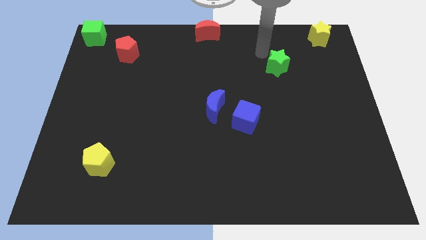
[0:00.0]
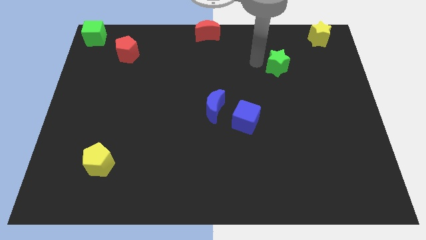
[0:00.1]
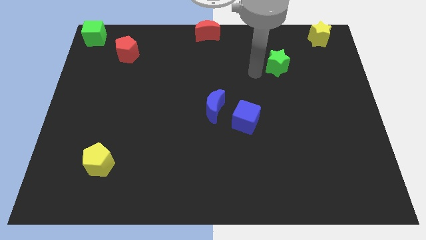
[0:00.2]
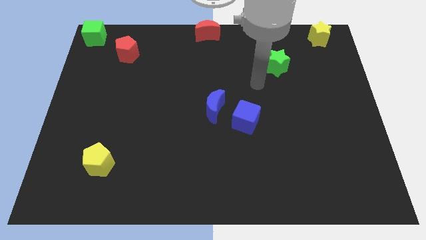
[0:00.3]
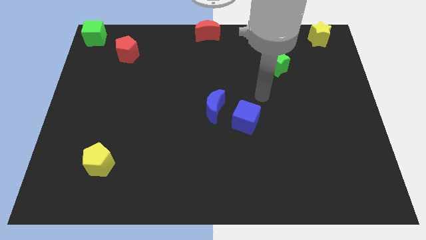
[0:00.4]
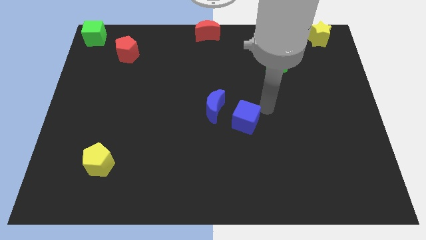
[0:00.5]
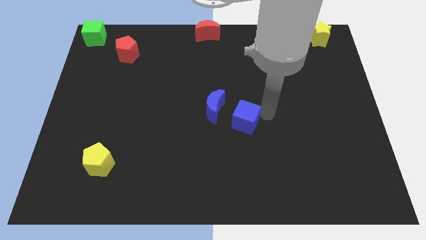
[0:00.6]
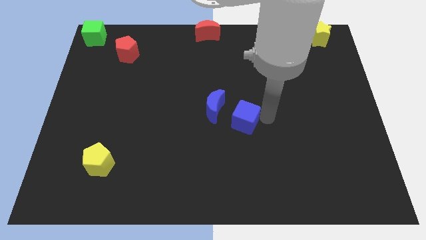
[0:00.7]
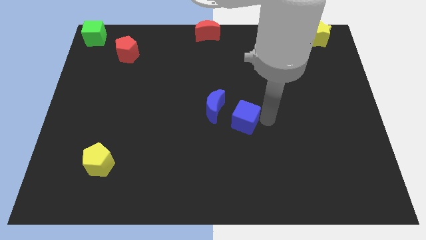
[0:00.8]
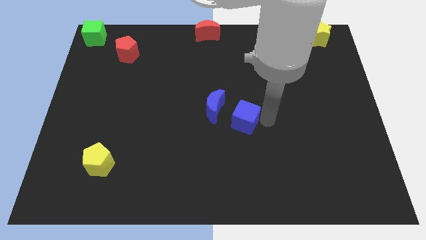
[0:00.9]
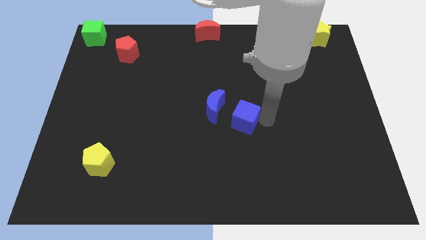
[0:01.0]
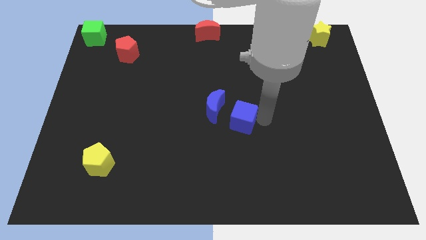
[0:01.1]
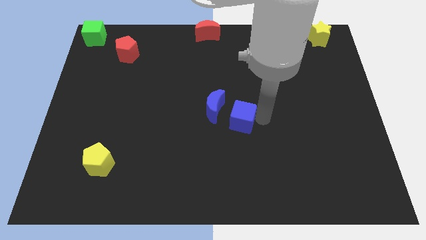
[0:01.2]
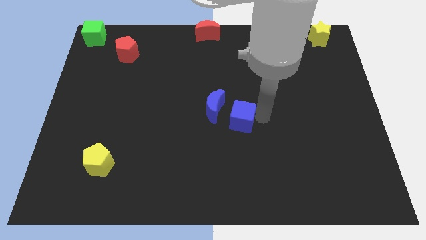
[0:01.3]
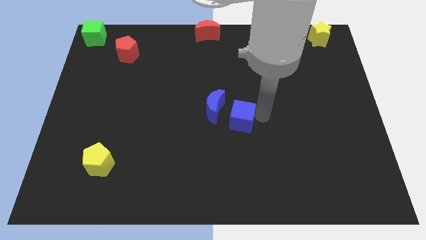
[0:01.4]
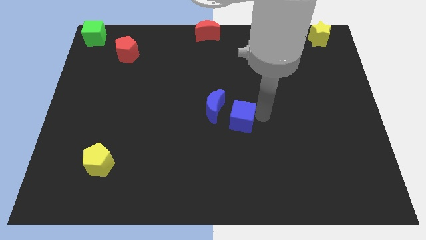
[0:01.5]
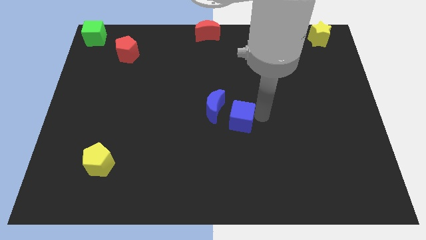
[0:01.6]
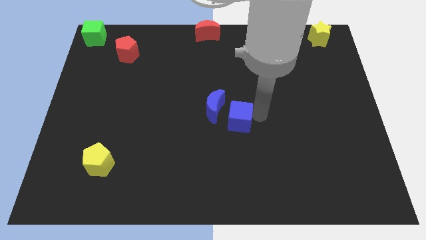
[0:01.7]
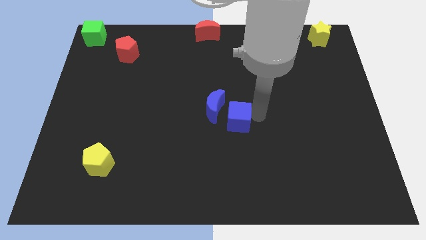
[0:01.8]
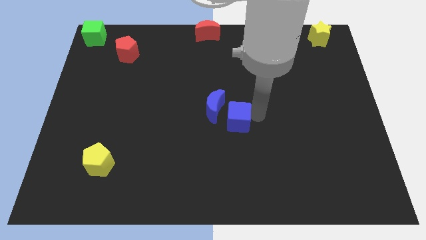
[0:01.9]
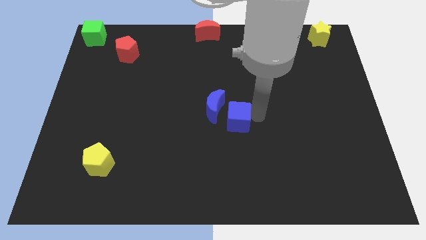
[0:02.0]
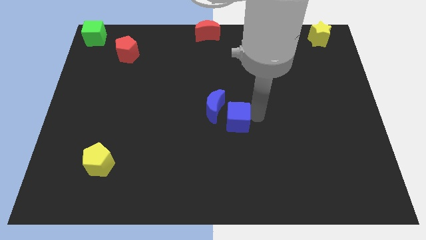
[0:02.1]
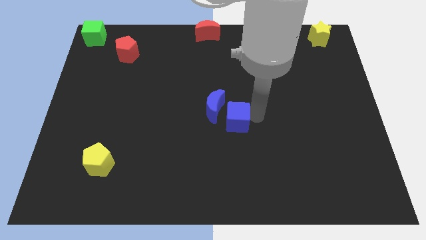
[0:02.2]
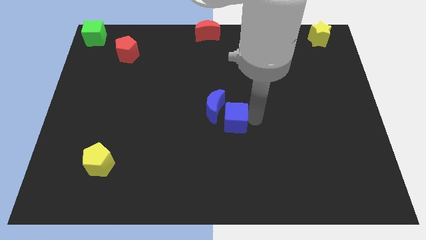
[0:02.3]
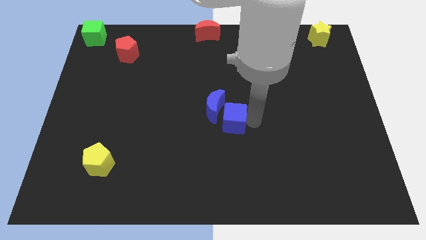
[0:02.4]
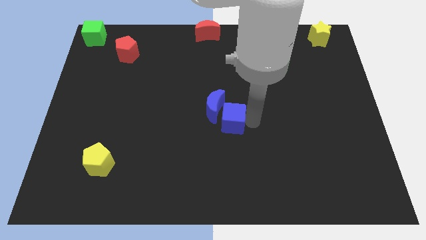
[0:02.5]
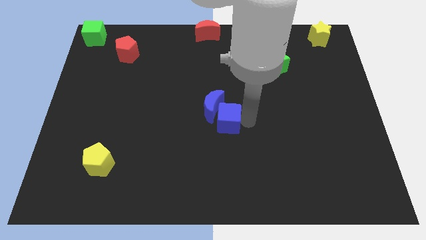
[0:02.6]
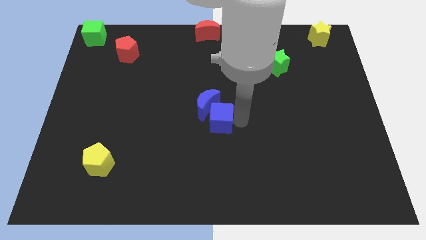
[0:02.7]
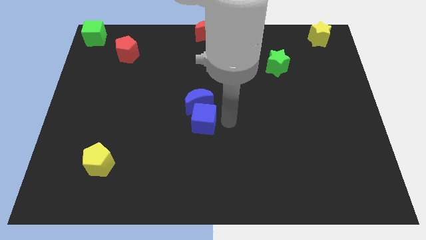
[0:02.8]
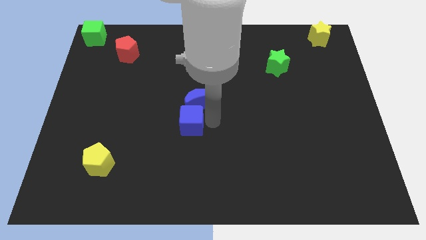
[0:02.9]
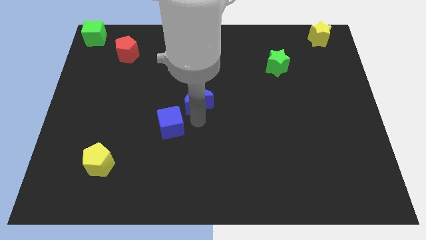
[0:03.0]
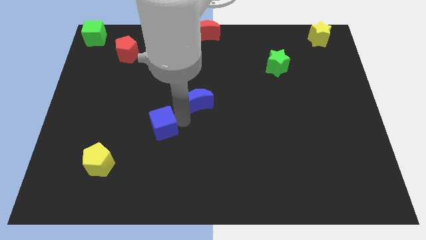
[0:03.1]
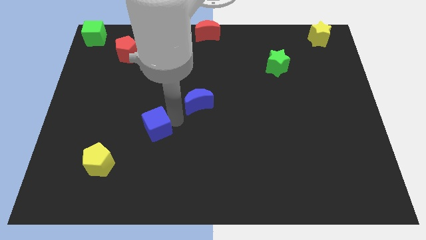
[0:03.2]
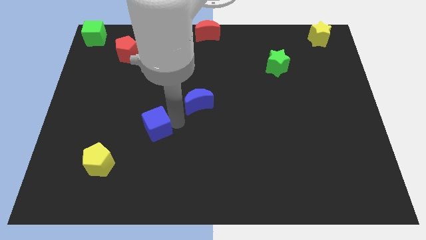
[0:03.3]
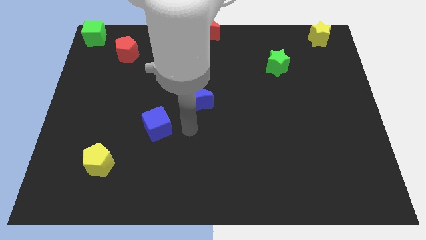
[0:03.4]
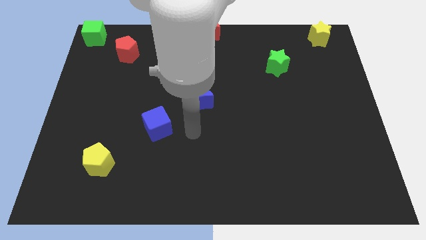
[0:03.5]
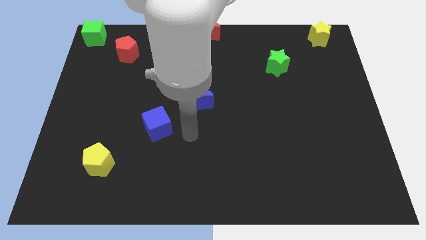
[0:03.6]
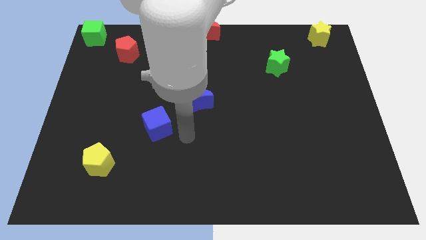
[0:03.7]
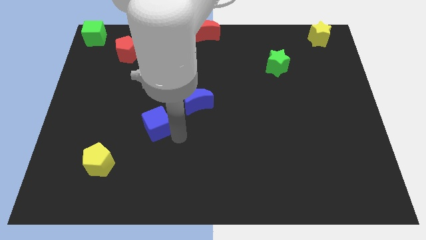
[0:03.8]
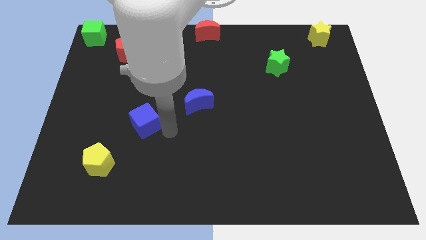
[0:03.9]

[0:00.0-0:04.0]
place the blue cube in between the blue moon and yellow pentagon

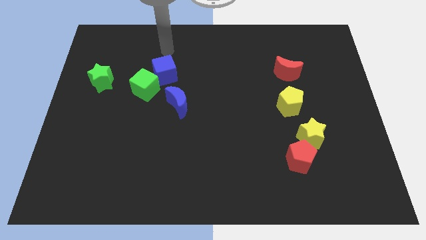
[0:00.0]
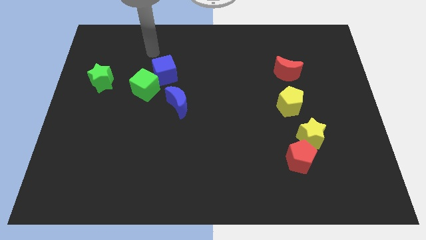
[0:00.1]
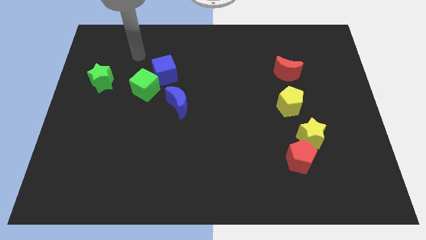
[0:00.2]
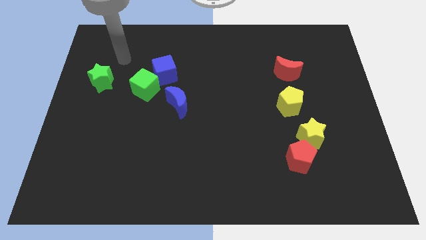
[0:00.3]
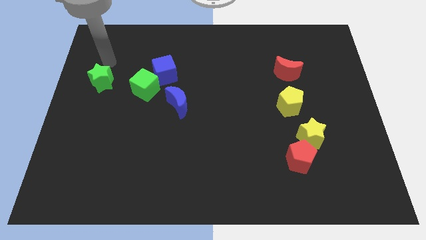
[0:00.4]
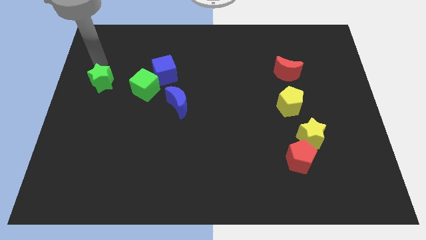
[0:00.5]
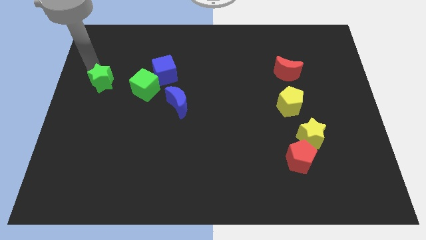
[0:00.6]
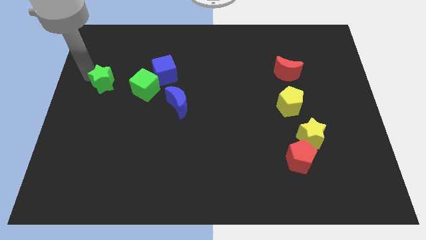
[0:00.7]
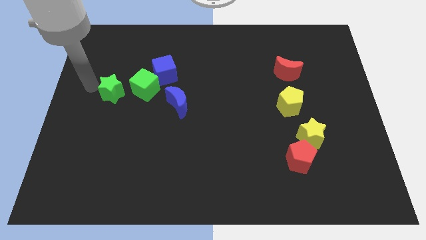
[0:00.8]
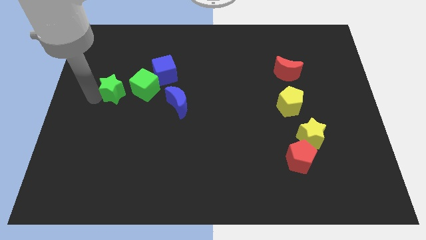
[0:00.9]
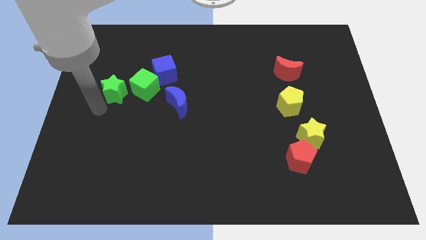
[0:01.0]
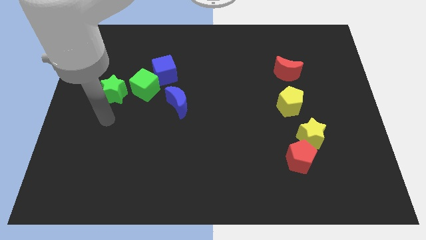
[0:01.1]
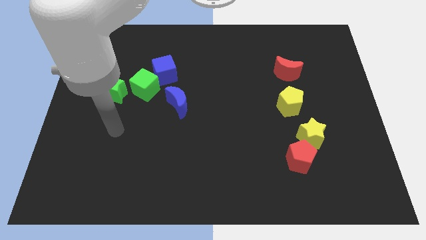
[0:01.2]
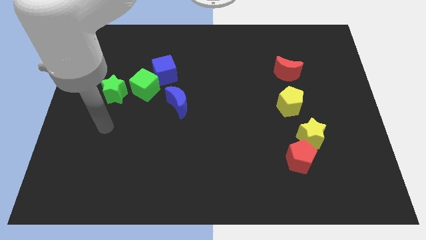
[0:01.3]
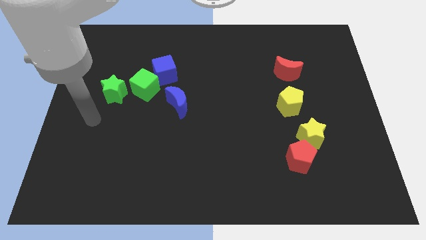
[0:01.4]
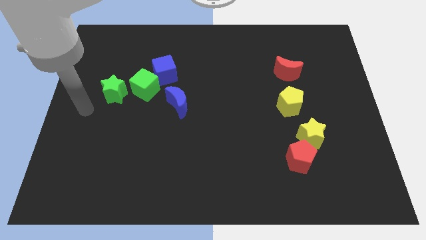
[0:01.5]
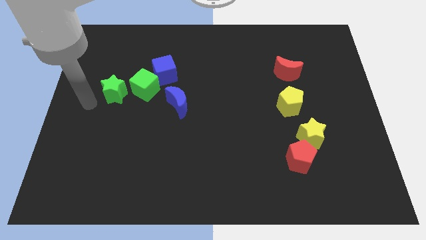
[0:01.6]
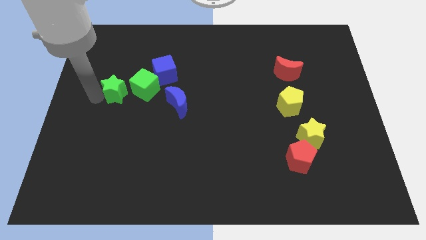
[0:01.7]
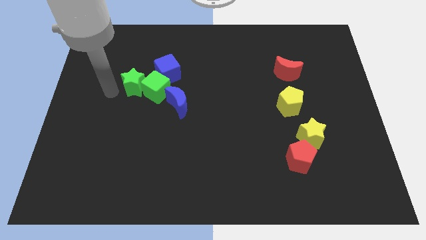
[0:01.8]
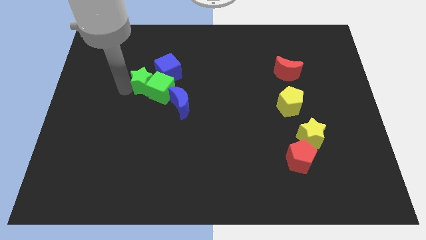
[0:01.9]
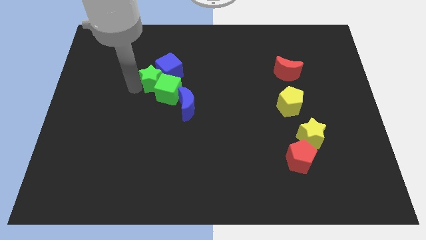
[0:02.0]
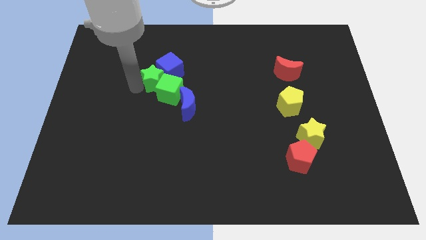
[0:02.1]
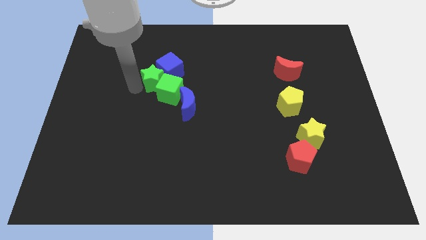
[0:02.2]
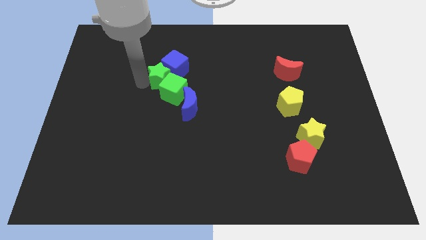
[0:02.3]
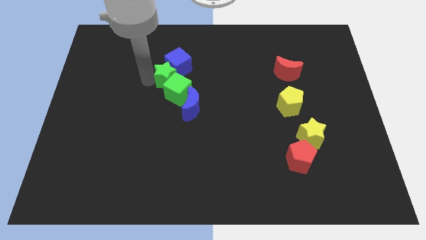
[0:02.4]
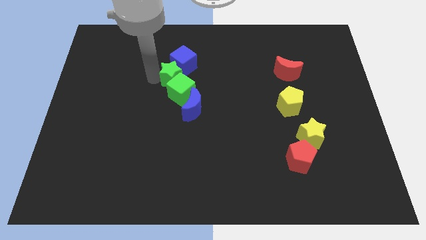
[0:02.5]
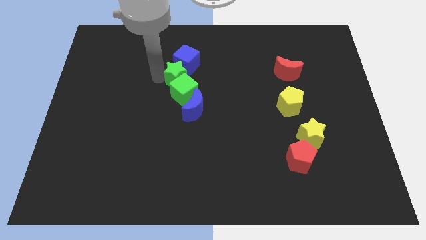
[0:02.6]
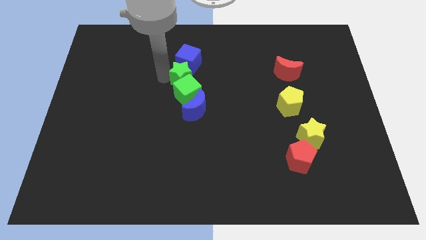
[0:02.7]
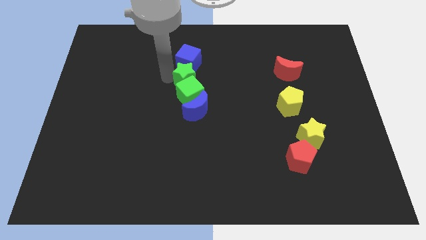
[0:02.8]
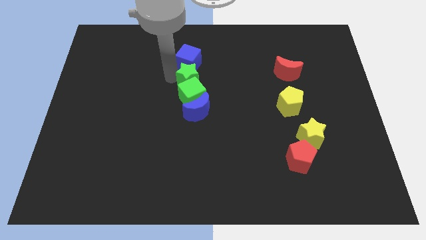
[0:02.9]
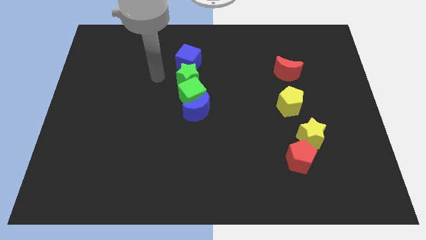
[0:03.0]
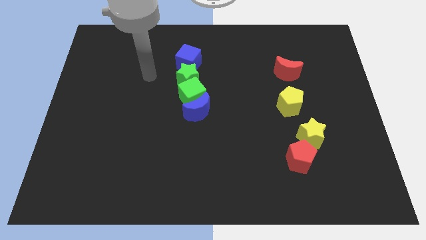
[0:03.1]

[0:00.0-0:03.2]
place green star below blue cube

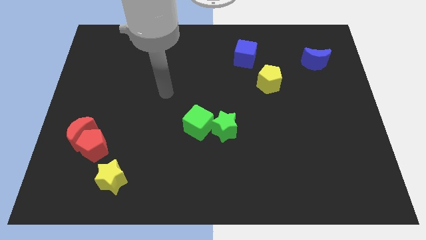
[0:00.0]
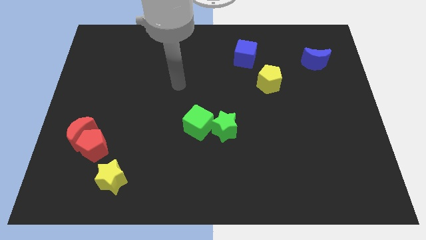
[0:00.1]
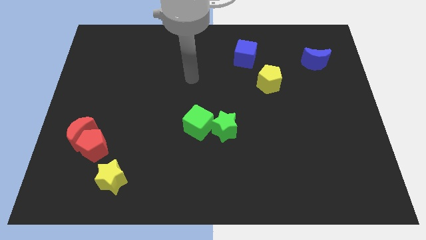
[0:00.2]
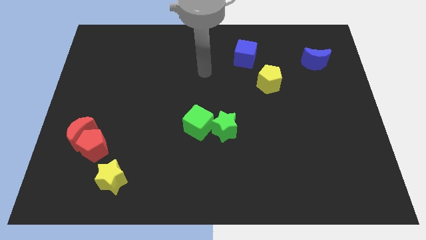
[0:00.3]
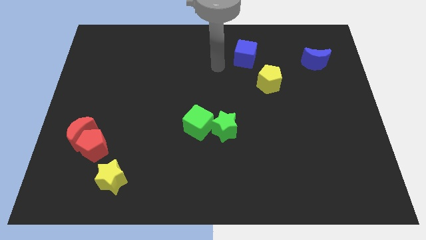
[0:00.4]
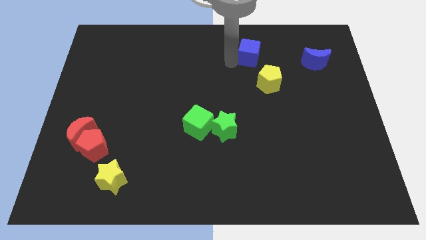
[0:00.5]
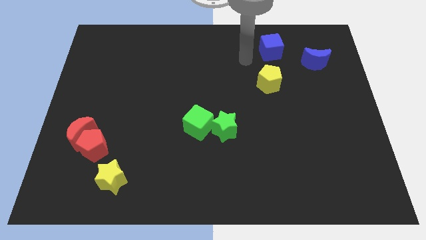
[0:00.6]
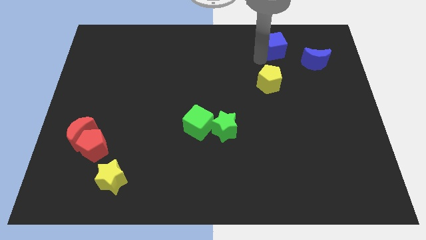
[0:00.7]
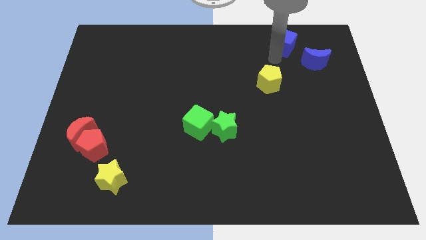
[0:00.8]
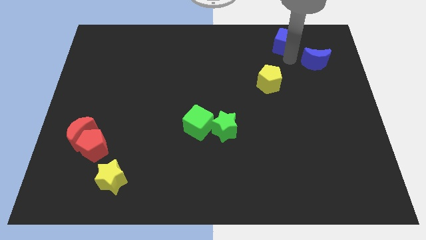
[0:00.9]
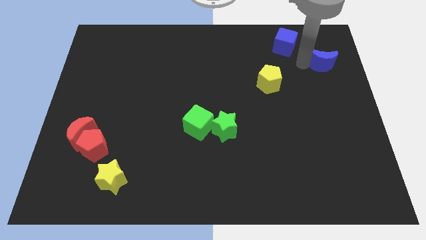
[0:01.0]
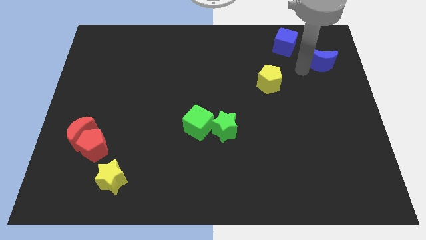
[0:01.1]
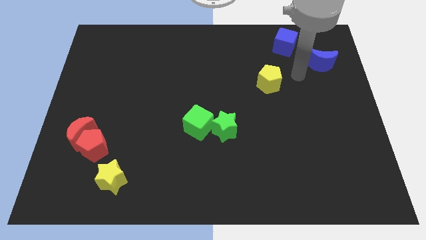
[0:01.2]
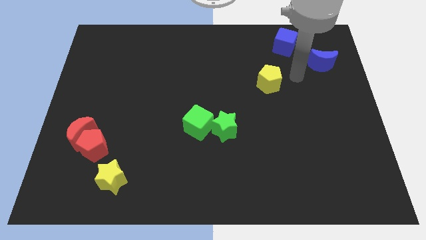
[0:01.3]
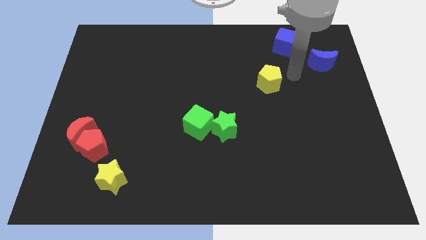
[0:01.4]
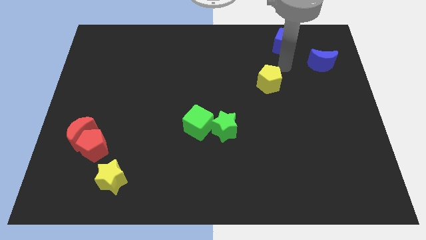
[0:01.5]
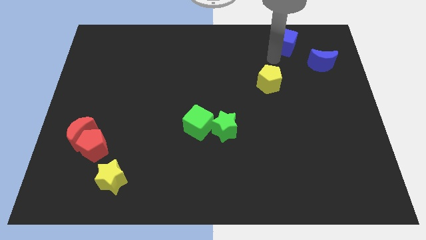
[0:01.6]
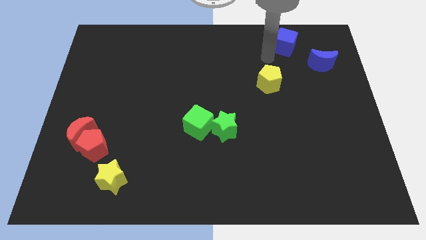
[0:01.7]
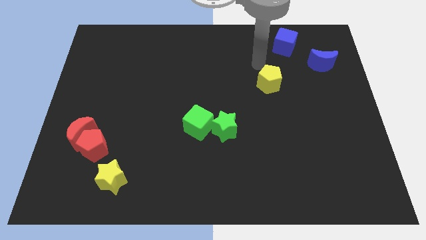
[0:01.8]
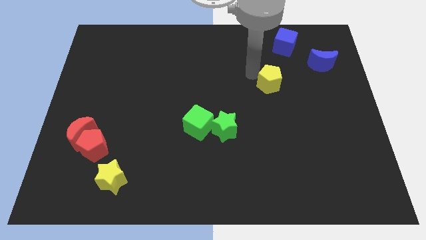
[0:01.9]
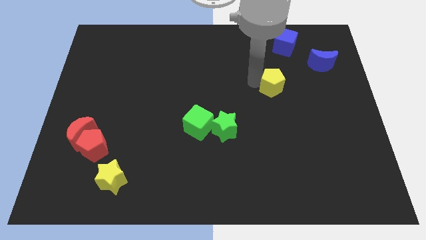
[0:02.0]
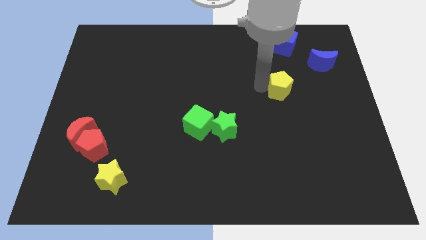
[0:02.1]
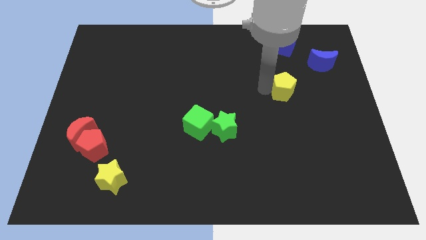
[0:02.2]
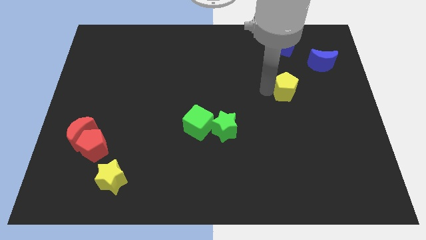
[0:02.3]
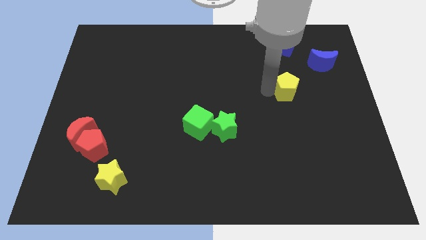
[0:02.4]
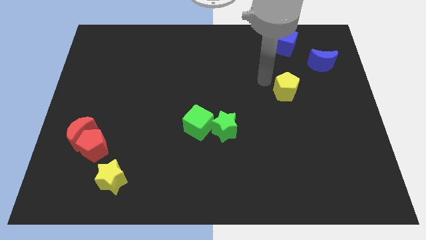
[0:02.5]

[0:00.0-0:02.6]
push yellow pentagon below blue cube
